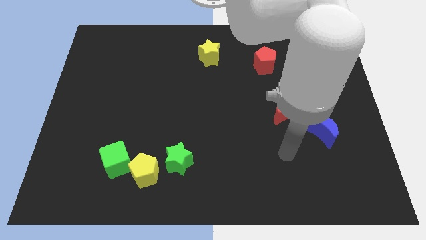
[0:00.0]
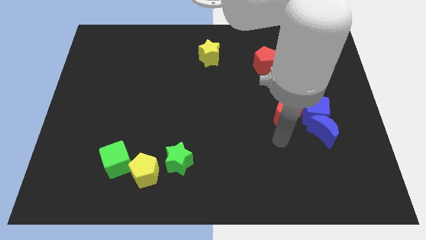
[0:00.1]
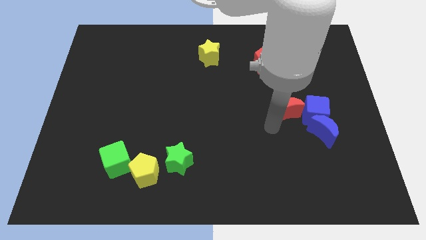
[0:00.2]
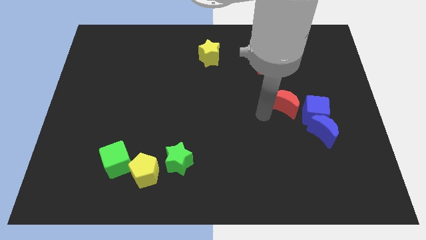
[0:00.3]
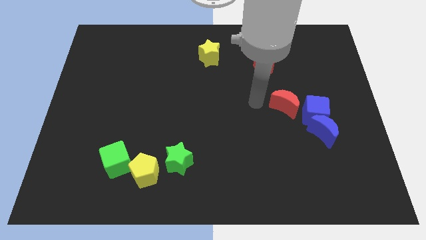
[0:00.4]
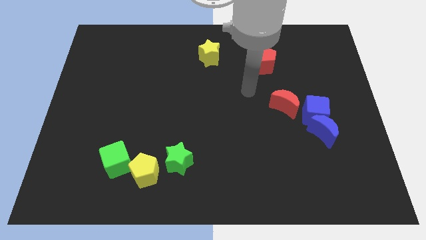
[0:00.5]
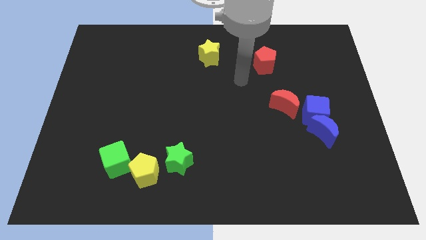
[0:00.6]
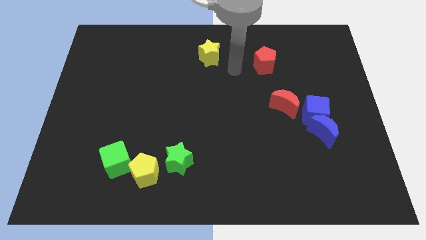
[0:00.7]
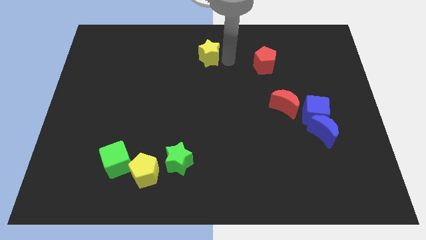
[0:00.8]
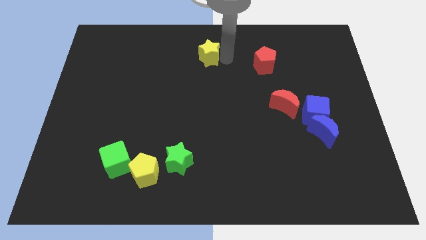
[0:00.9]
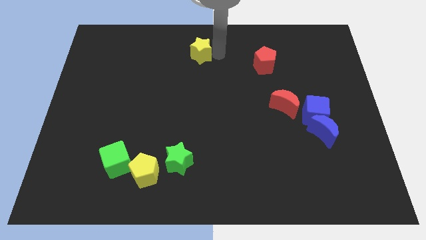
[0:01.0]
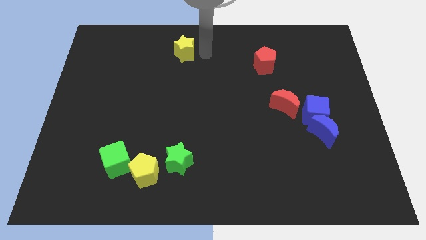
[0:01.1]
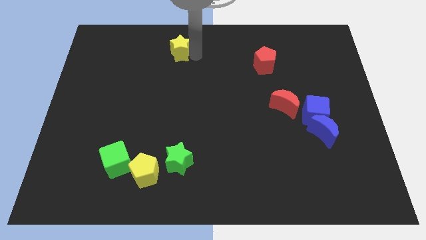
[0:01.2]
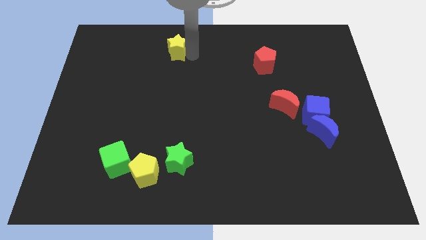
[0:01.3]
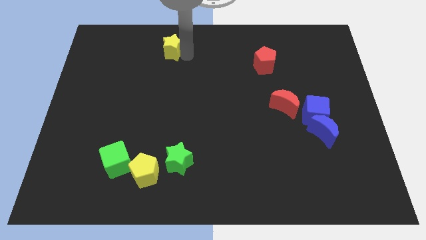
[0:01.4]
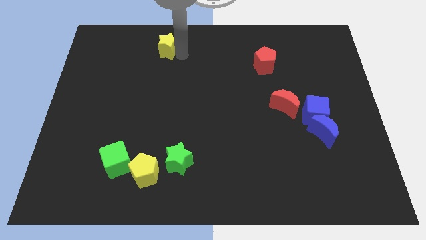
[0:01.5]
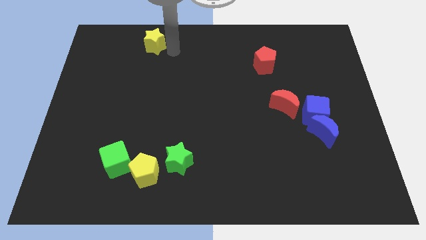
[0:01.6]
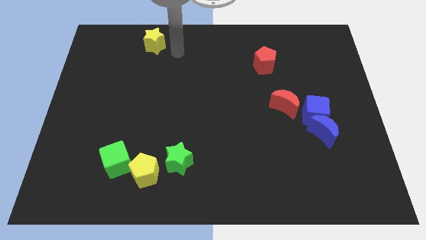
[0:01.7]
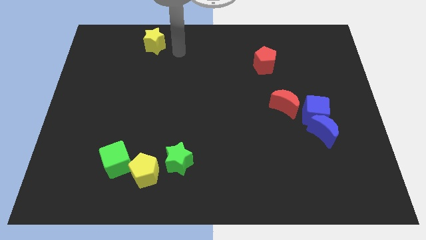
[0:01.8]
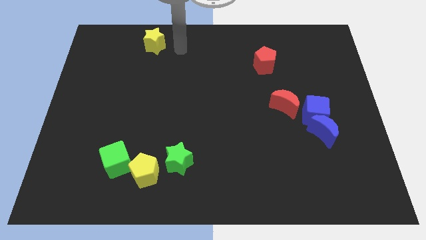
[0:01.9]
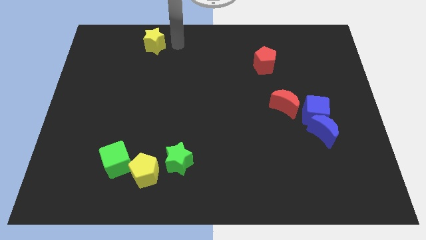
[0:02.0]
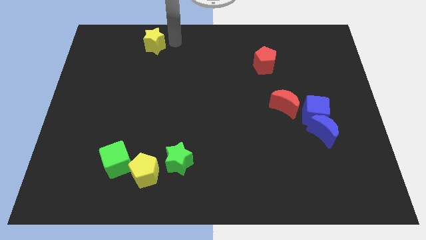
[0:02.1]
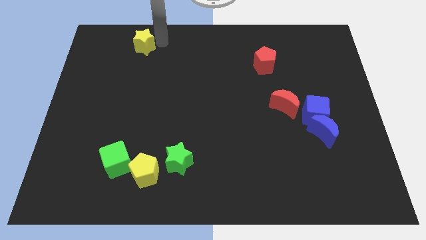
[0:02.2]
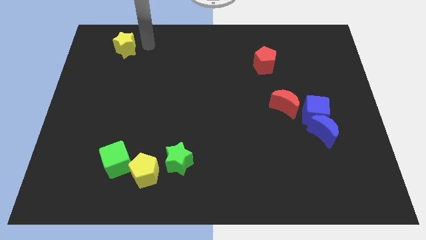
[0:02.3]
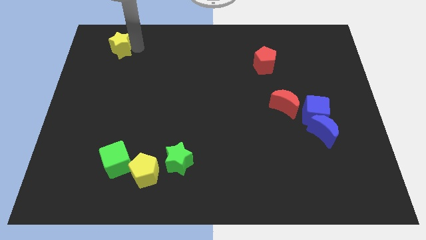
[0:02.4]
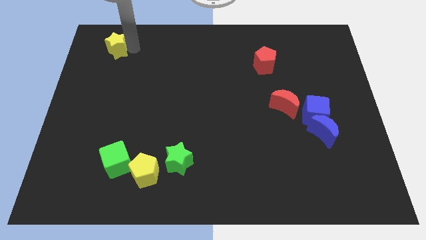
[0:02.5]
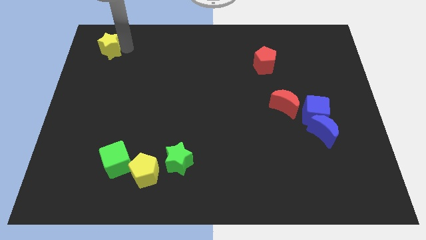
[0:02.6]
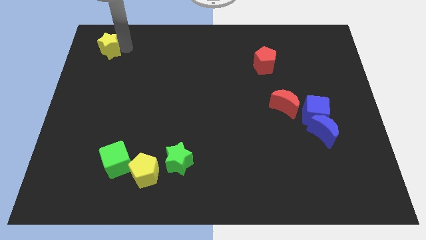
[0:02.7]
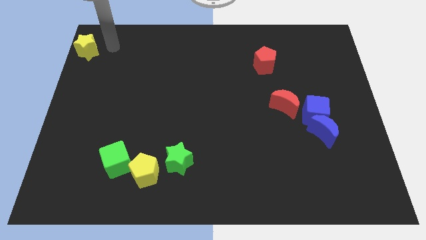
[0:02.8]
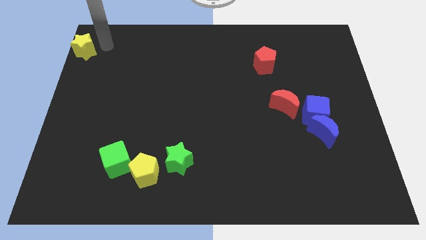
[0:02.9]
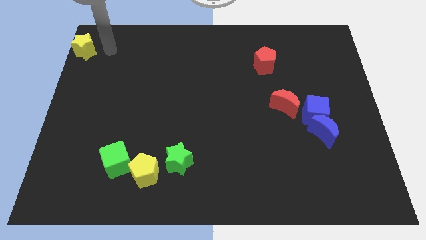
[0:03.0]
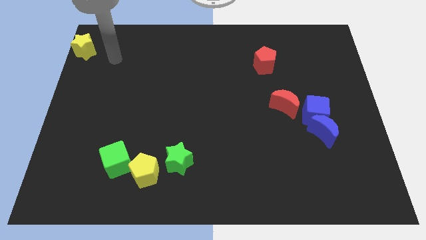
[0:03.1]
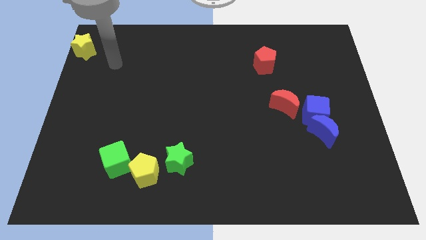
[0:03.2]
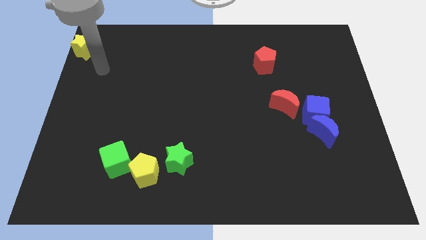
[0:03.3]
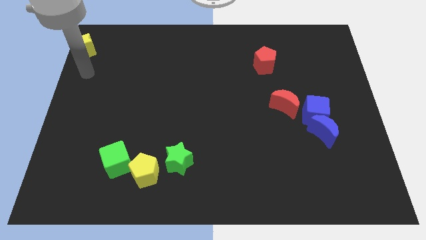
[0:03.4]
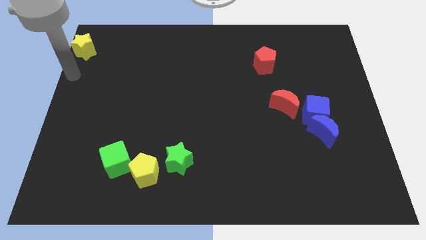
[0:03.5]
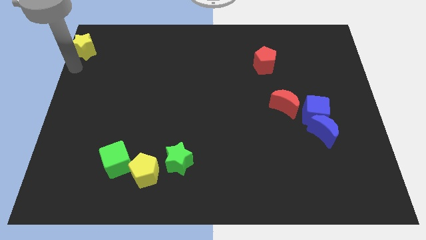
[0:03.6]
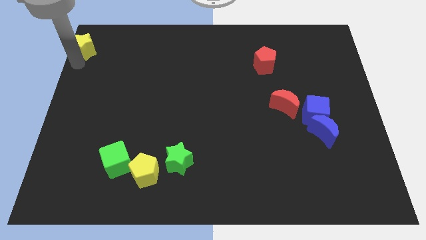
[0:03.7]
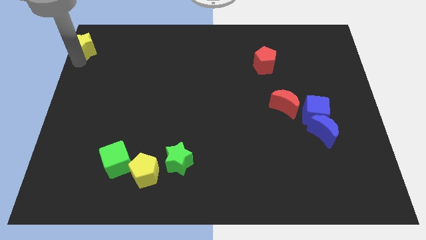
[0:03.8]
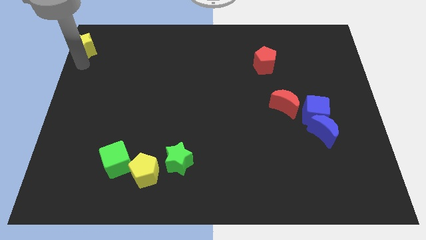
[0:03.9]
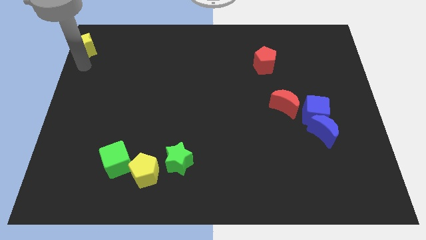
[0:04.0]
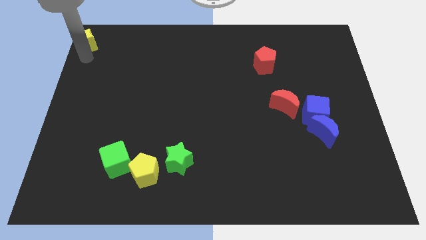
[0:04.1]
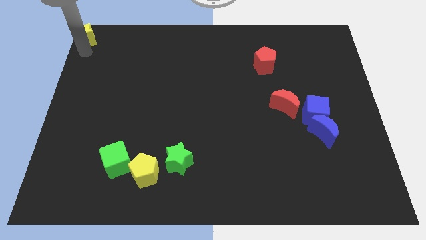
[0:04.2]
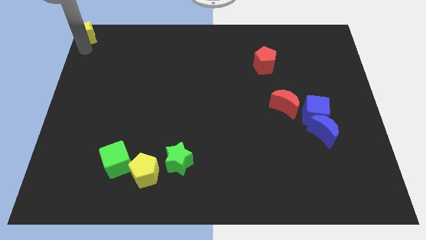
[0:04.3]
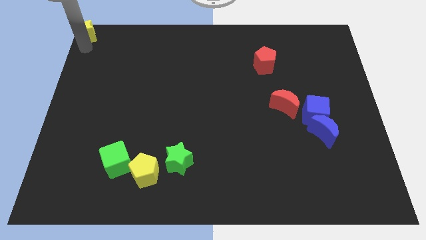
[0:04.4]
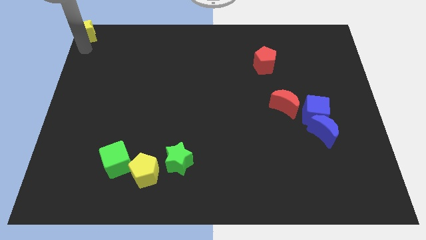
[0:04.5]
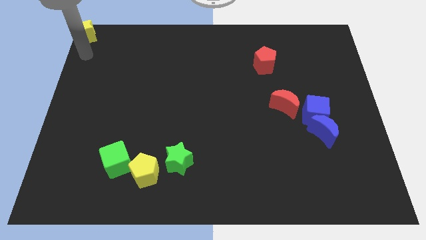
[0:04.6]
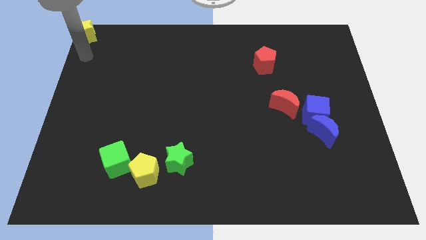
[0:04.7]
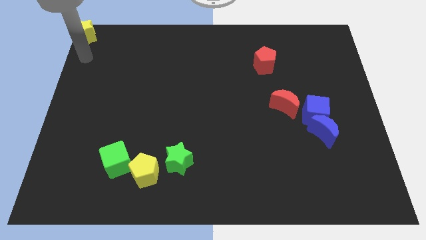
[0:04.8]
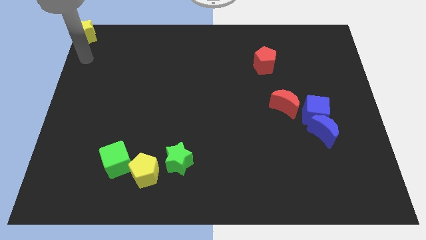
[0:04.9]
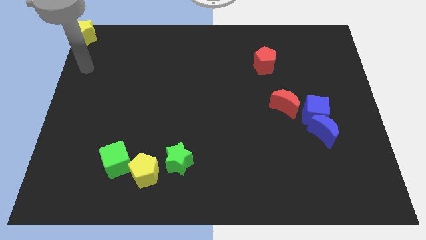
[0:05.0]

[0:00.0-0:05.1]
push the yellow star to the top left corner

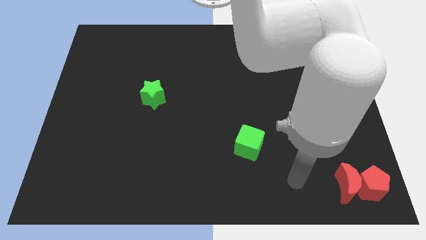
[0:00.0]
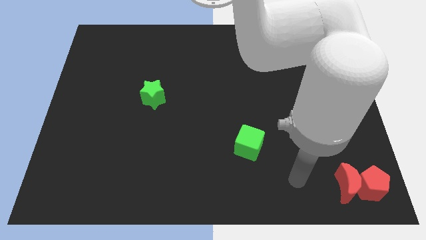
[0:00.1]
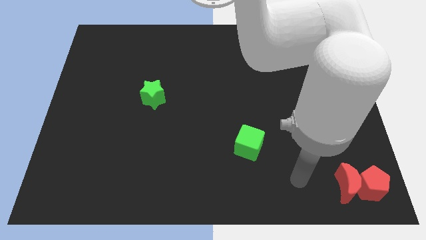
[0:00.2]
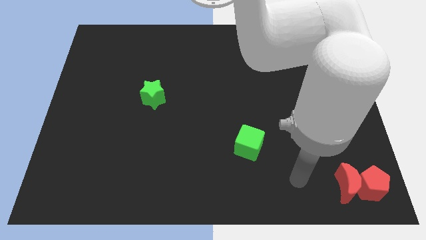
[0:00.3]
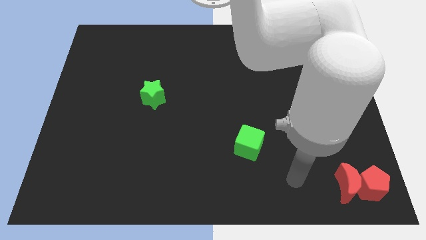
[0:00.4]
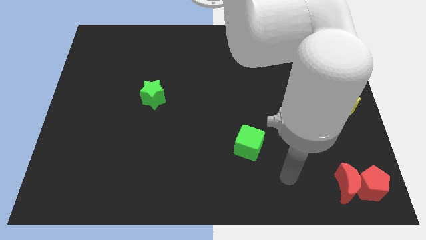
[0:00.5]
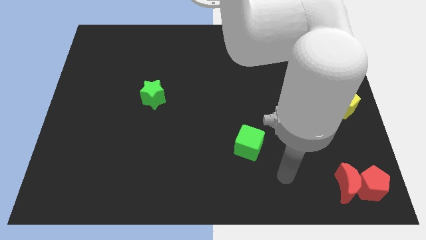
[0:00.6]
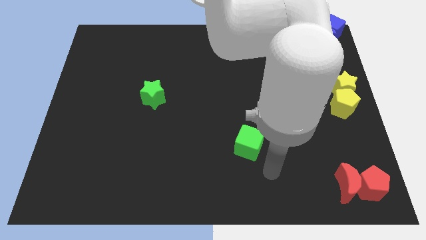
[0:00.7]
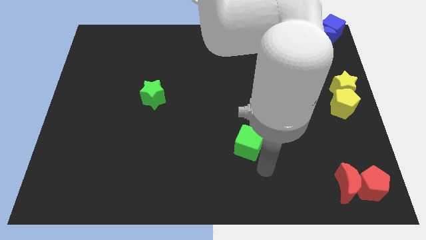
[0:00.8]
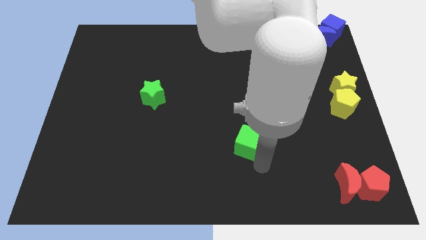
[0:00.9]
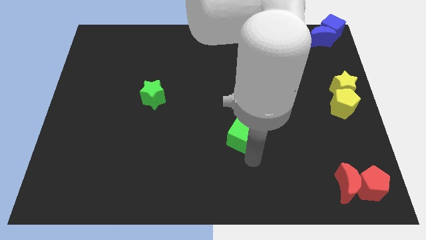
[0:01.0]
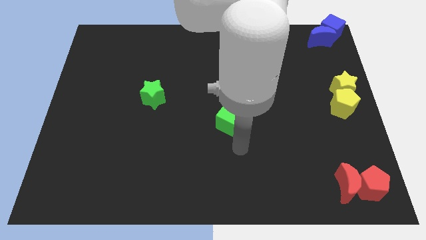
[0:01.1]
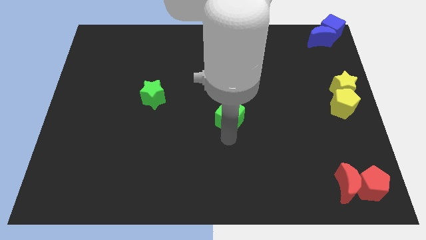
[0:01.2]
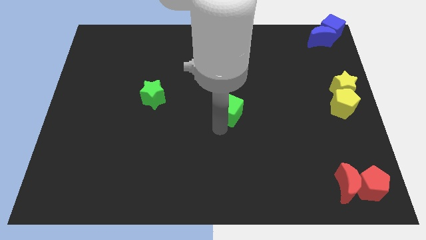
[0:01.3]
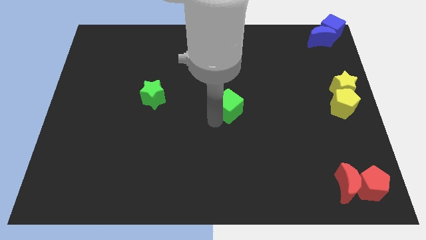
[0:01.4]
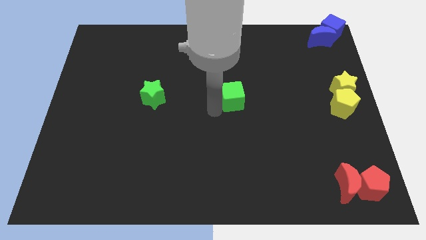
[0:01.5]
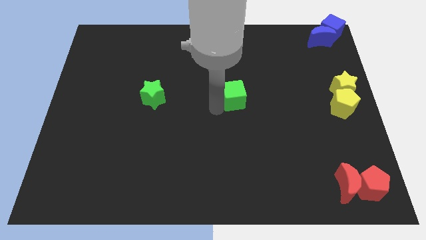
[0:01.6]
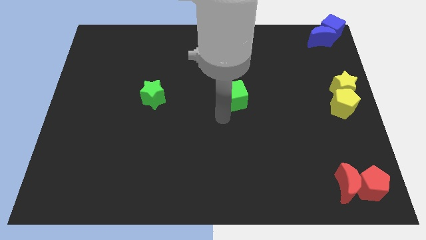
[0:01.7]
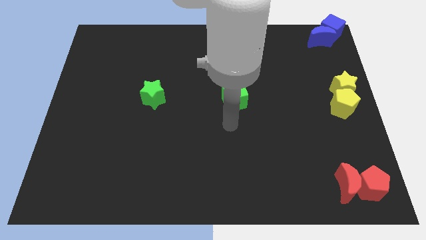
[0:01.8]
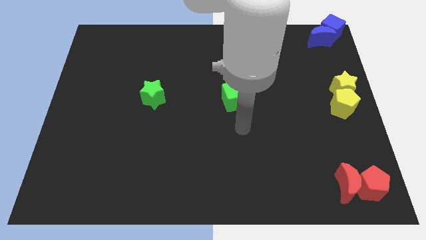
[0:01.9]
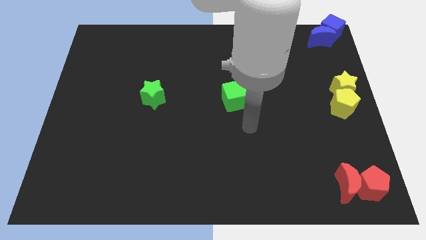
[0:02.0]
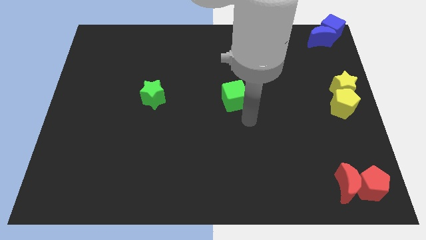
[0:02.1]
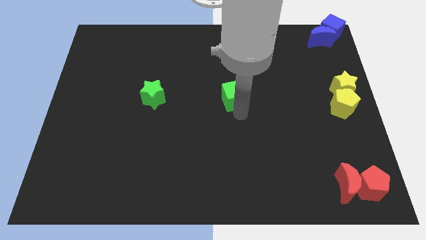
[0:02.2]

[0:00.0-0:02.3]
place the green cube at center of the board

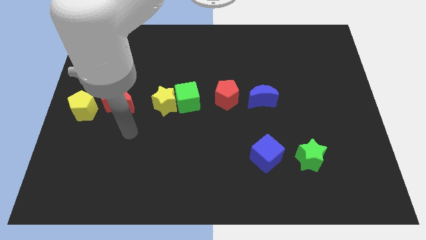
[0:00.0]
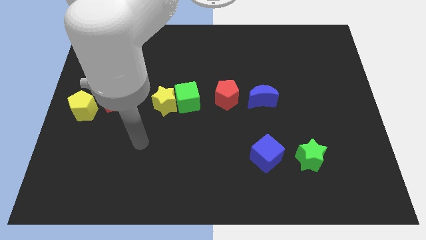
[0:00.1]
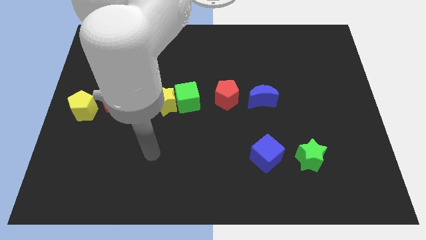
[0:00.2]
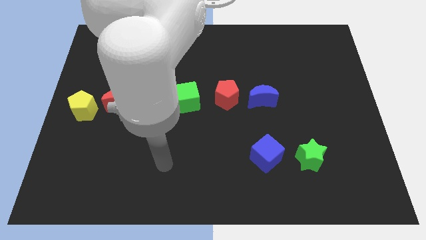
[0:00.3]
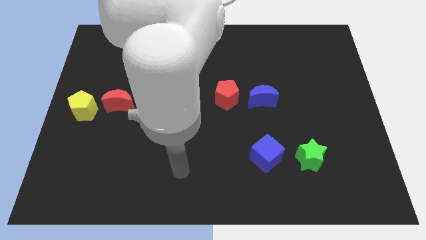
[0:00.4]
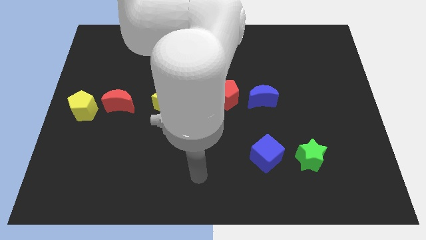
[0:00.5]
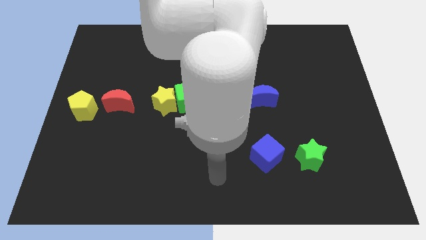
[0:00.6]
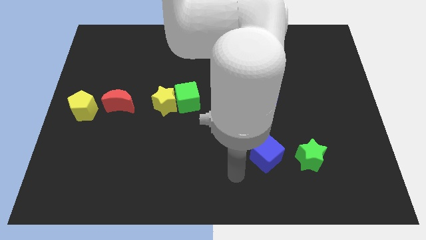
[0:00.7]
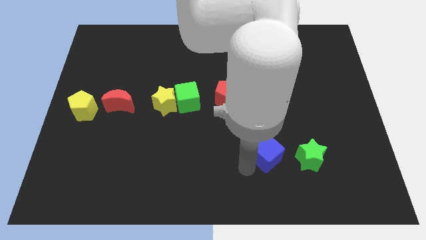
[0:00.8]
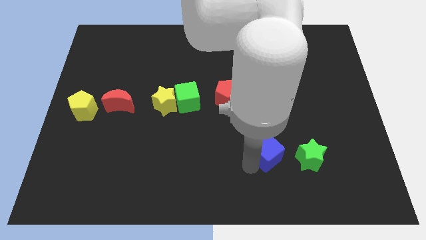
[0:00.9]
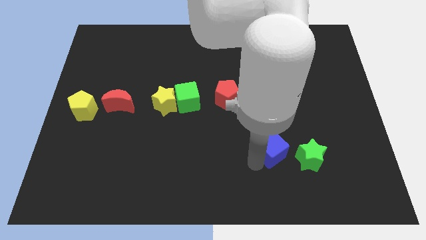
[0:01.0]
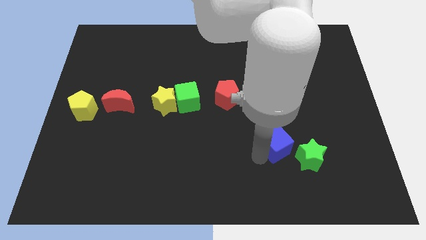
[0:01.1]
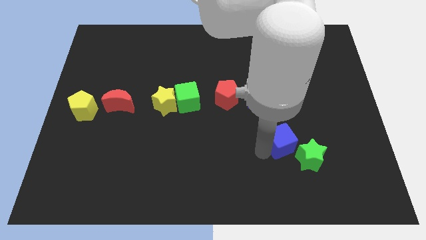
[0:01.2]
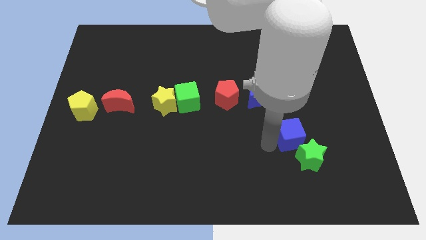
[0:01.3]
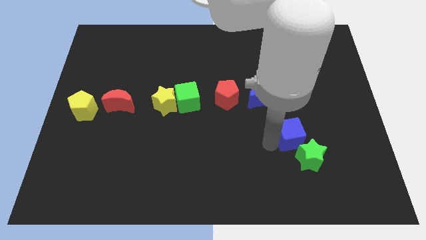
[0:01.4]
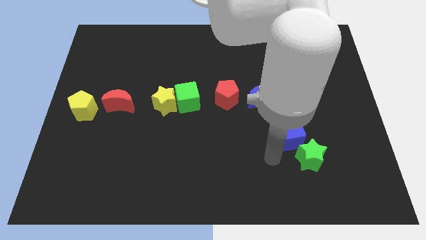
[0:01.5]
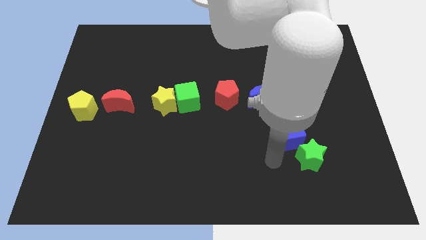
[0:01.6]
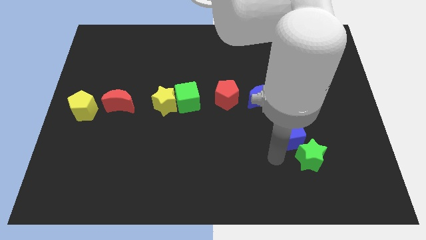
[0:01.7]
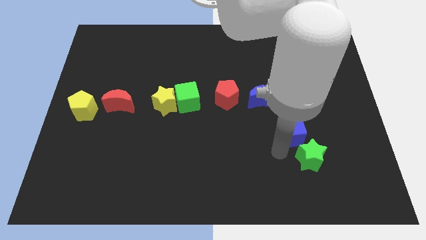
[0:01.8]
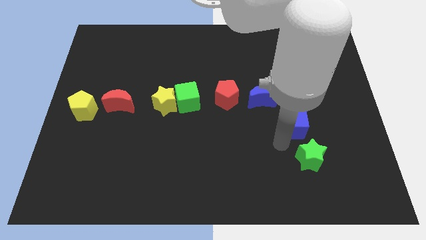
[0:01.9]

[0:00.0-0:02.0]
move the blue cube above the green star
